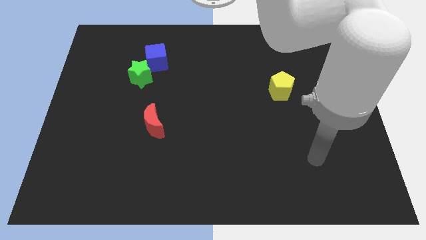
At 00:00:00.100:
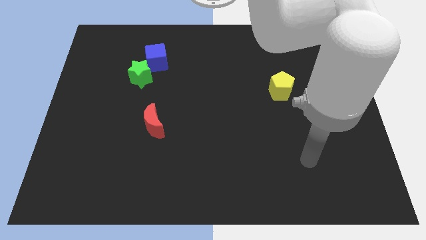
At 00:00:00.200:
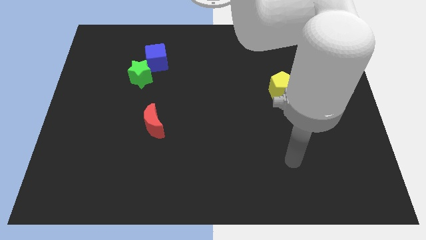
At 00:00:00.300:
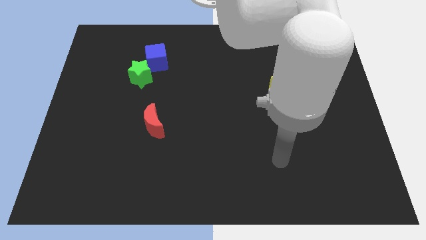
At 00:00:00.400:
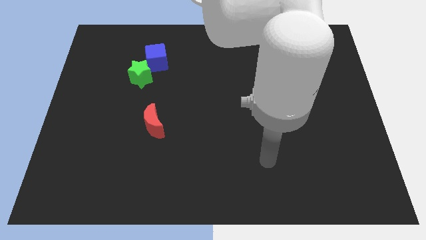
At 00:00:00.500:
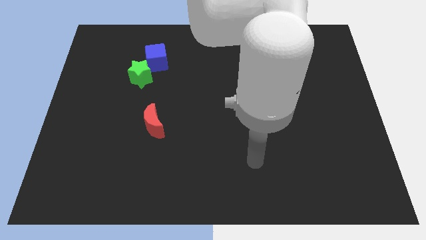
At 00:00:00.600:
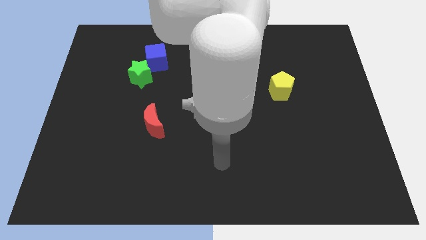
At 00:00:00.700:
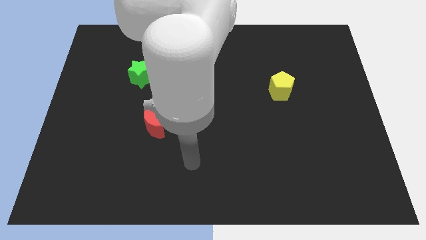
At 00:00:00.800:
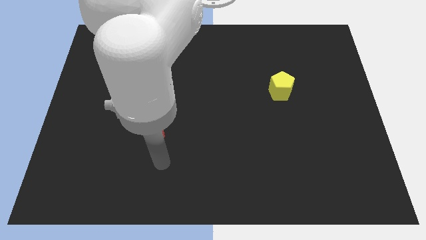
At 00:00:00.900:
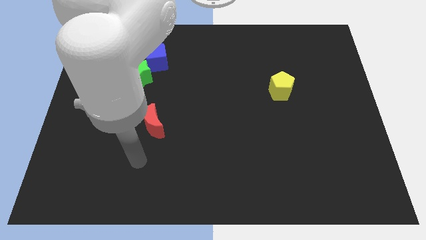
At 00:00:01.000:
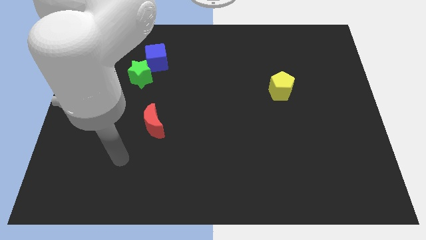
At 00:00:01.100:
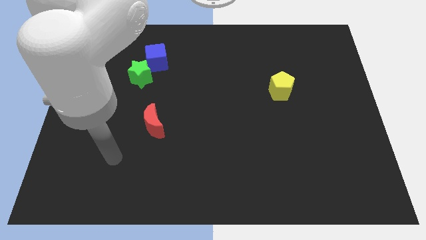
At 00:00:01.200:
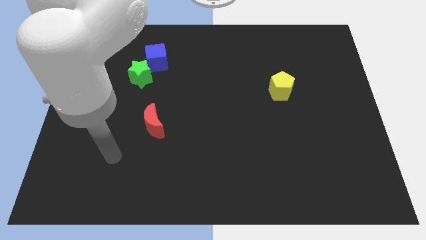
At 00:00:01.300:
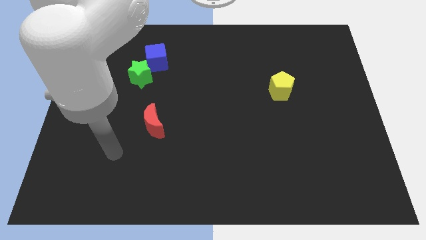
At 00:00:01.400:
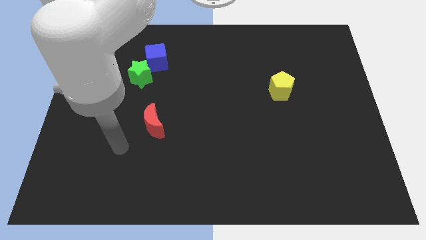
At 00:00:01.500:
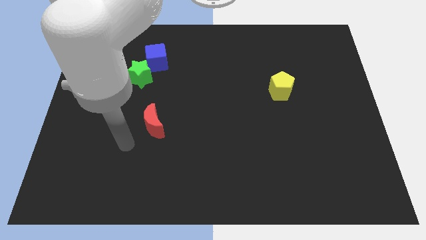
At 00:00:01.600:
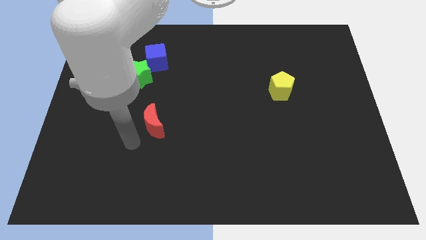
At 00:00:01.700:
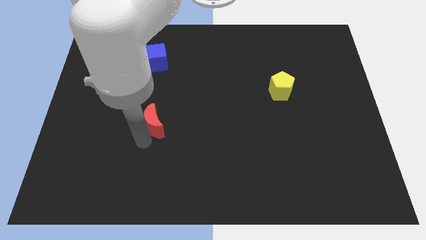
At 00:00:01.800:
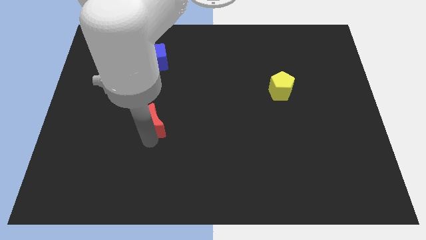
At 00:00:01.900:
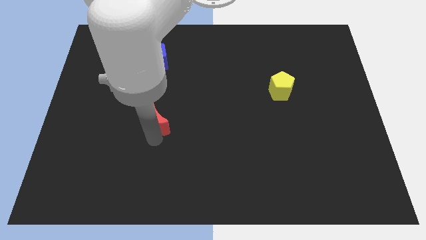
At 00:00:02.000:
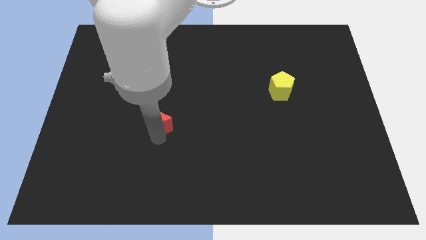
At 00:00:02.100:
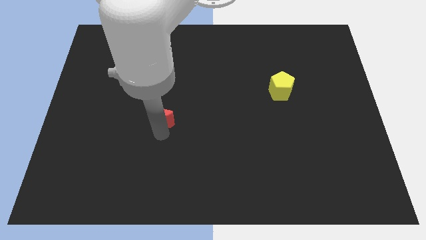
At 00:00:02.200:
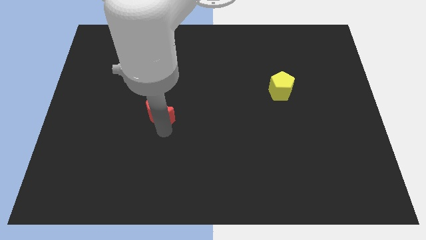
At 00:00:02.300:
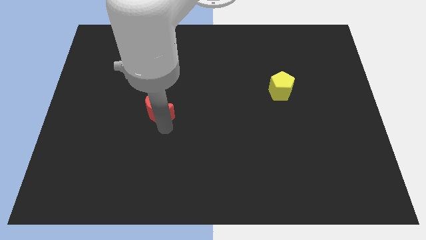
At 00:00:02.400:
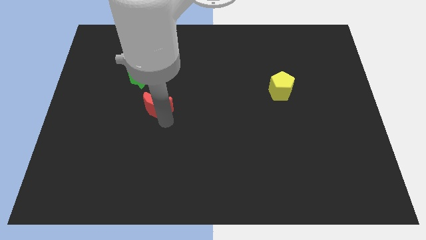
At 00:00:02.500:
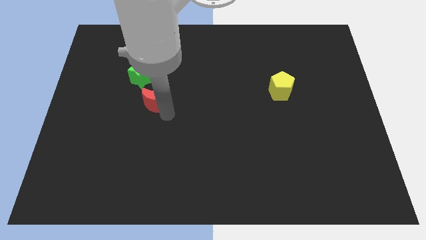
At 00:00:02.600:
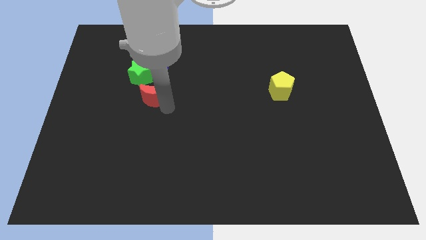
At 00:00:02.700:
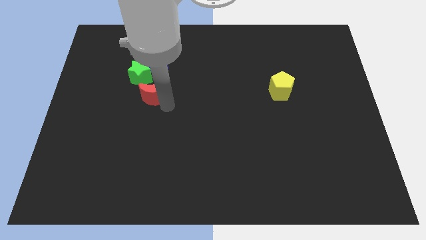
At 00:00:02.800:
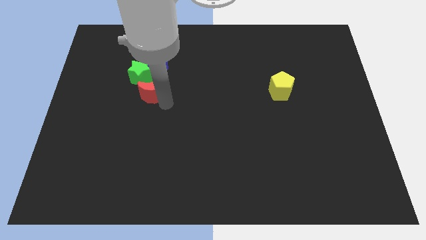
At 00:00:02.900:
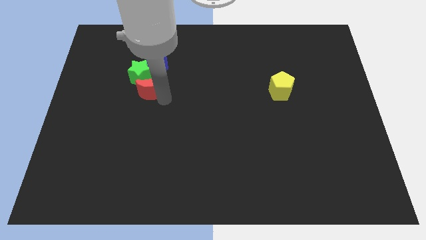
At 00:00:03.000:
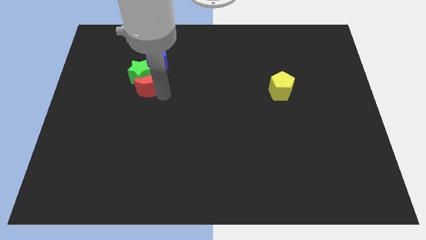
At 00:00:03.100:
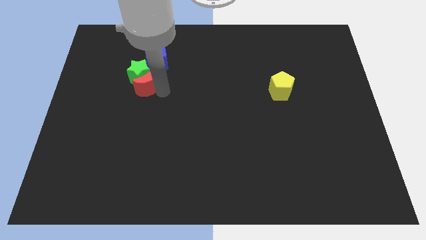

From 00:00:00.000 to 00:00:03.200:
move the red block next to the star

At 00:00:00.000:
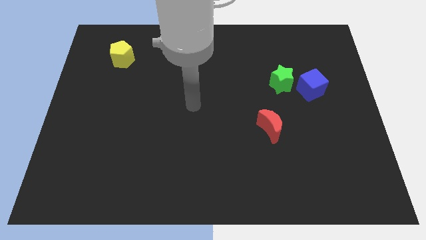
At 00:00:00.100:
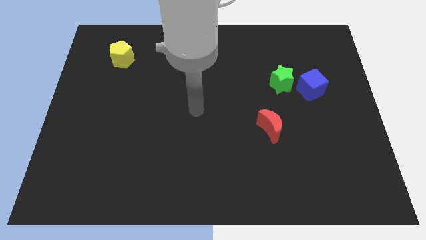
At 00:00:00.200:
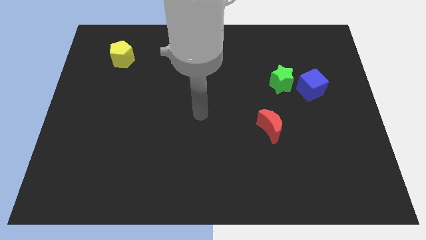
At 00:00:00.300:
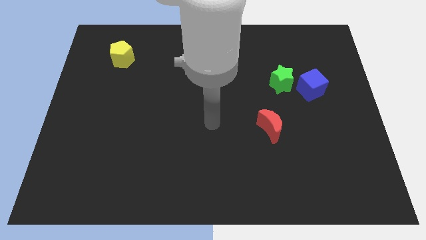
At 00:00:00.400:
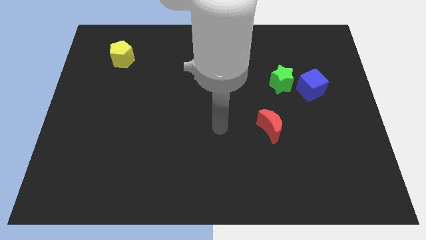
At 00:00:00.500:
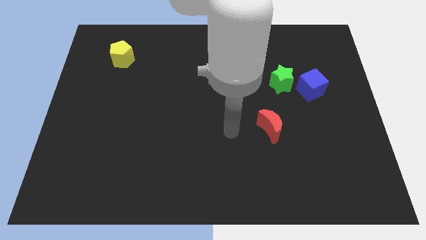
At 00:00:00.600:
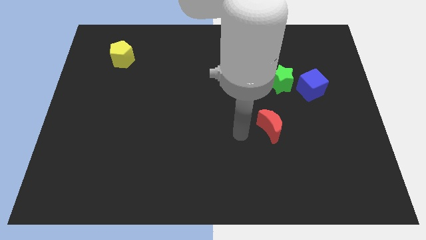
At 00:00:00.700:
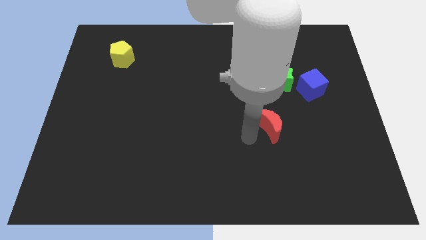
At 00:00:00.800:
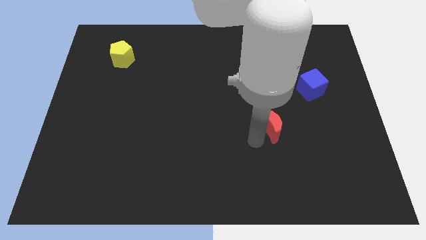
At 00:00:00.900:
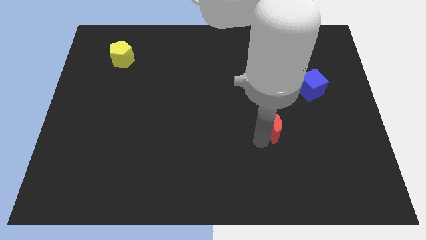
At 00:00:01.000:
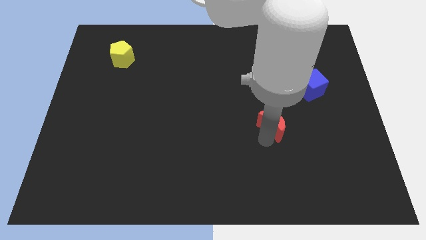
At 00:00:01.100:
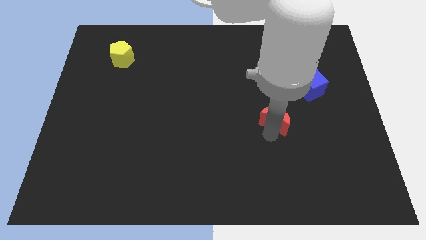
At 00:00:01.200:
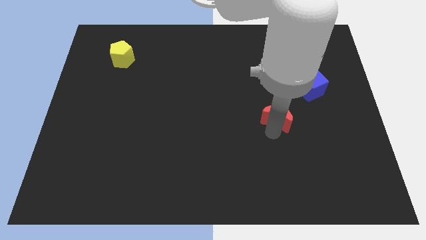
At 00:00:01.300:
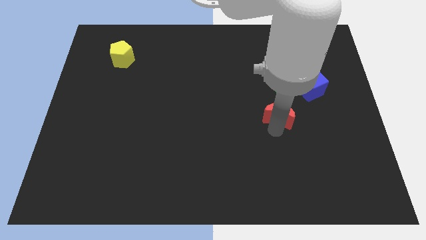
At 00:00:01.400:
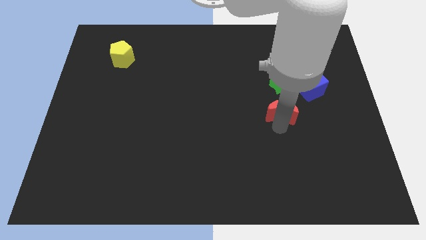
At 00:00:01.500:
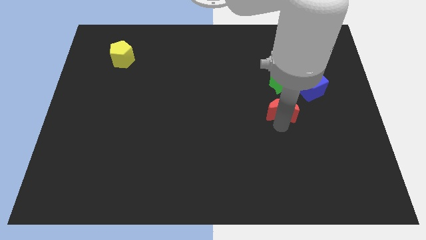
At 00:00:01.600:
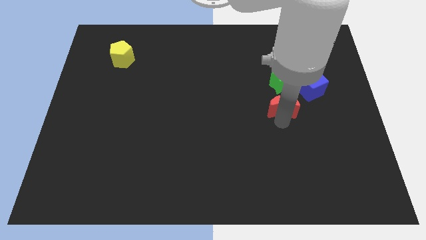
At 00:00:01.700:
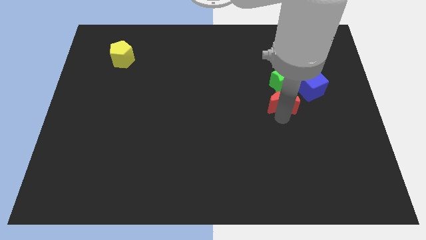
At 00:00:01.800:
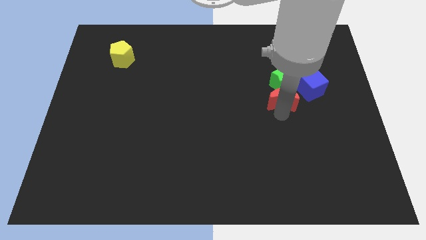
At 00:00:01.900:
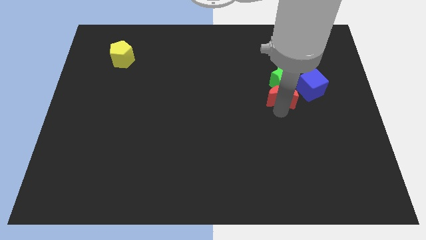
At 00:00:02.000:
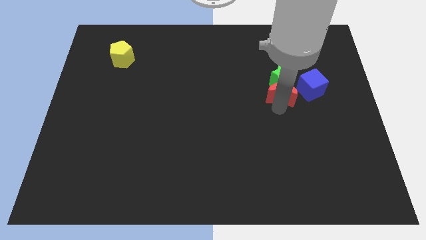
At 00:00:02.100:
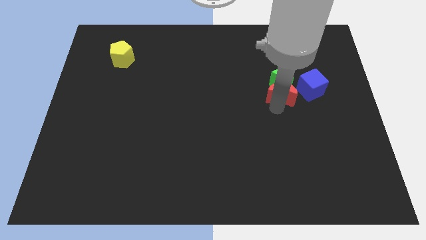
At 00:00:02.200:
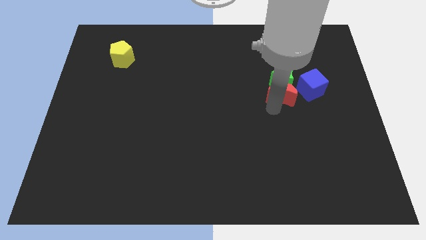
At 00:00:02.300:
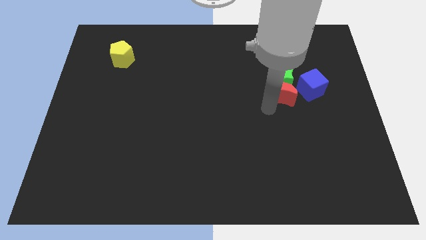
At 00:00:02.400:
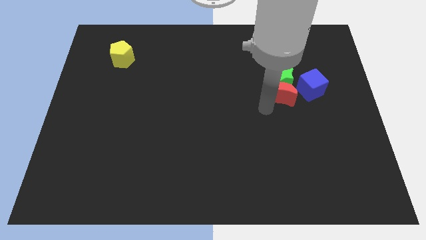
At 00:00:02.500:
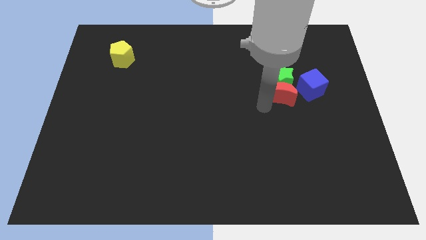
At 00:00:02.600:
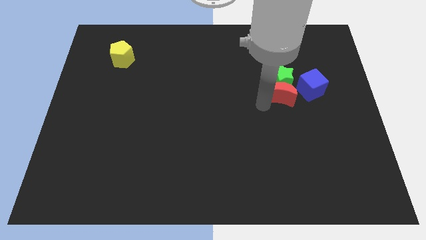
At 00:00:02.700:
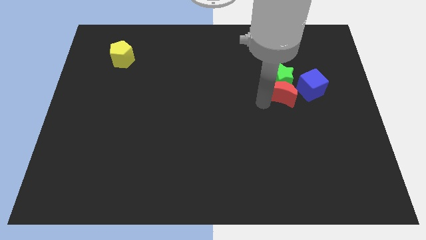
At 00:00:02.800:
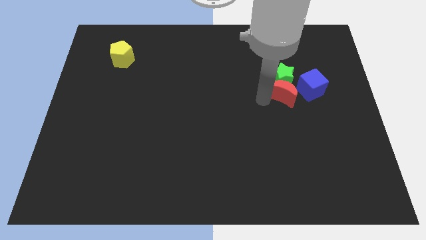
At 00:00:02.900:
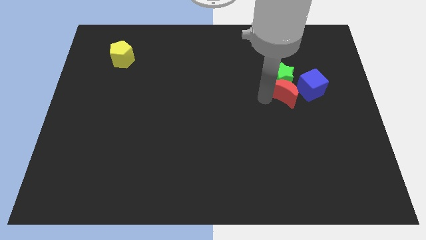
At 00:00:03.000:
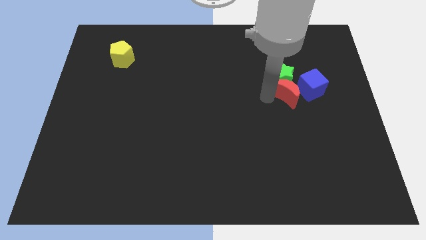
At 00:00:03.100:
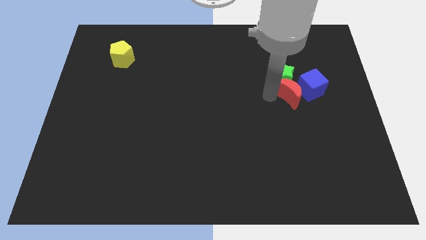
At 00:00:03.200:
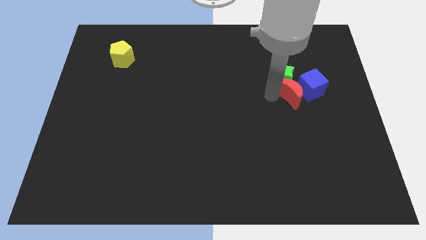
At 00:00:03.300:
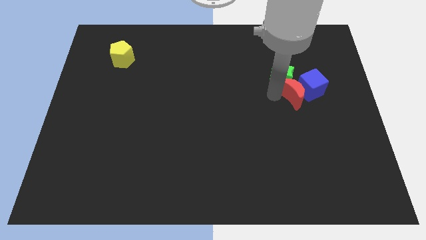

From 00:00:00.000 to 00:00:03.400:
push the red moon close to the blue cube

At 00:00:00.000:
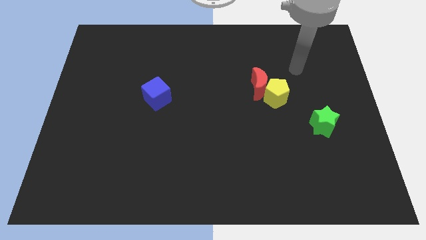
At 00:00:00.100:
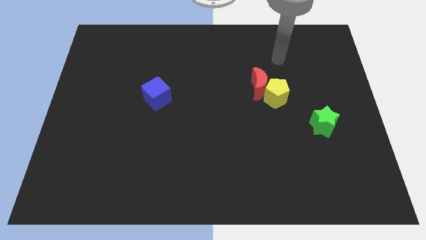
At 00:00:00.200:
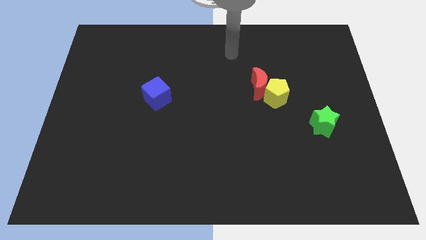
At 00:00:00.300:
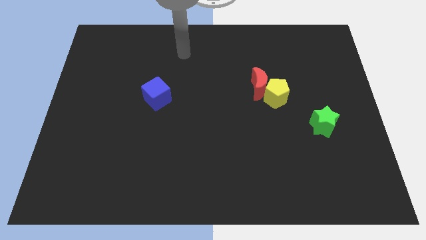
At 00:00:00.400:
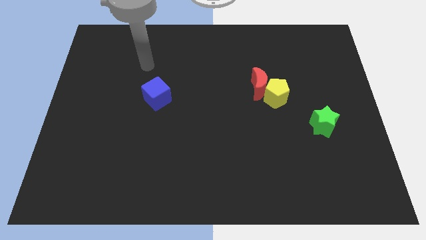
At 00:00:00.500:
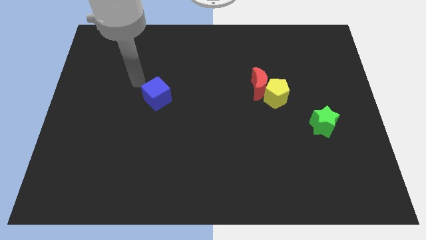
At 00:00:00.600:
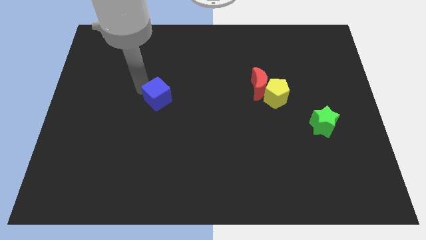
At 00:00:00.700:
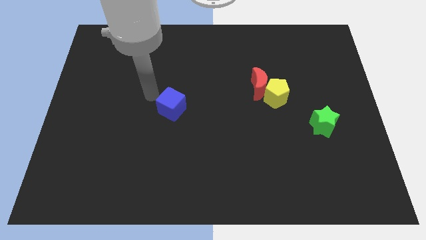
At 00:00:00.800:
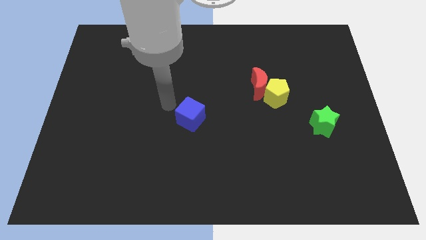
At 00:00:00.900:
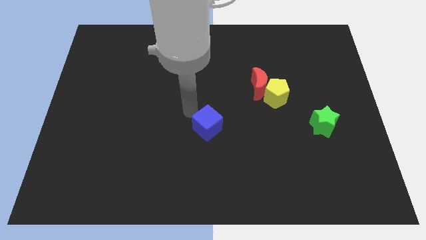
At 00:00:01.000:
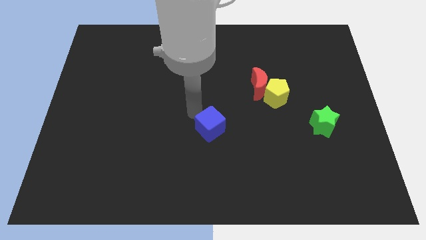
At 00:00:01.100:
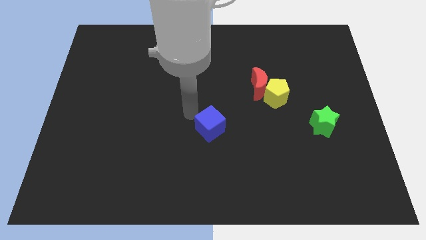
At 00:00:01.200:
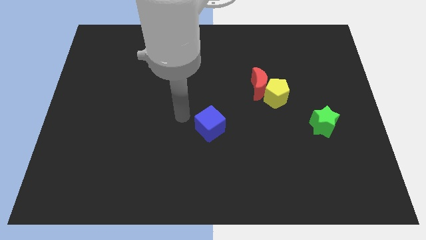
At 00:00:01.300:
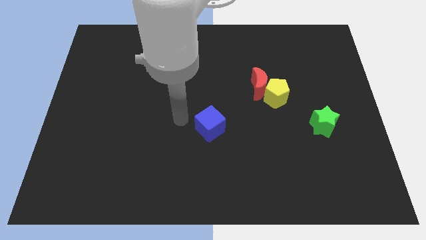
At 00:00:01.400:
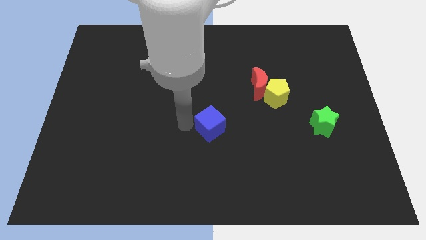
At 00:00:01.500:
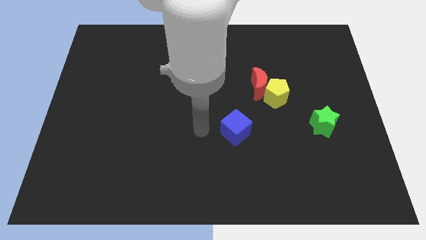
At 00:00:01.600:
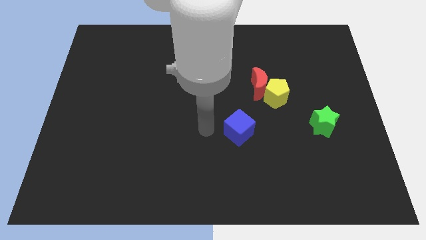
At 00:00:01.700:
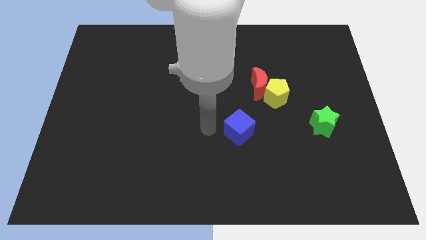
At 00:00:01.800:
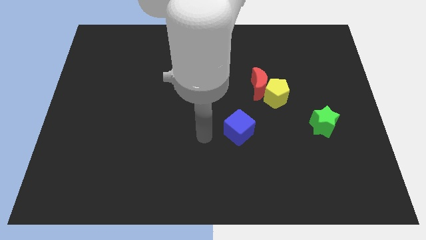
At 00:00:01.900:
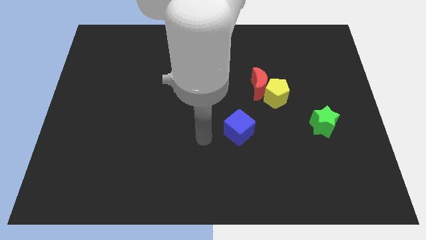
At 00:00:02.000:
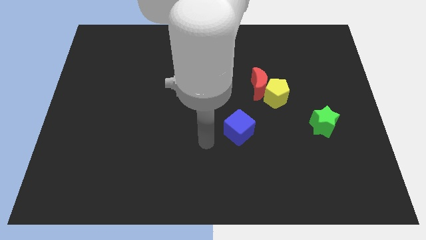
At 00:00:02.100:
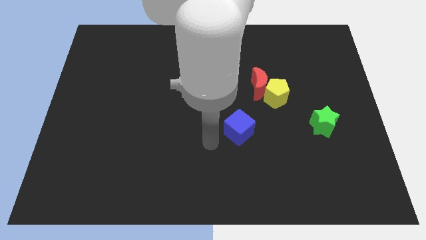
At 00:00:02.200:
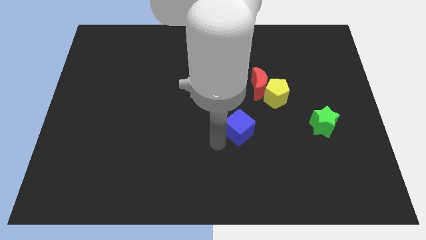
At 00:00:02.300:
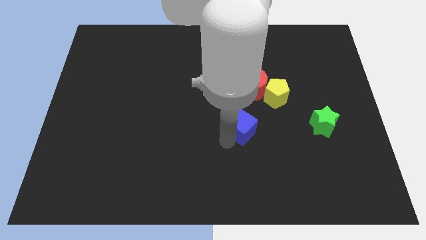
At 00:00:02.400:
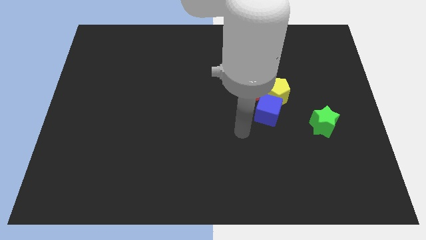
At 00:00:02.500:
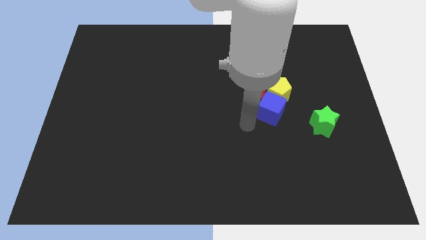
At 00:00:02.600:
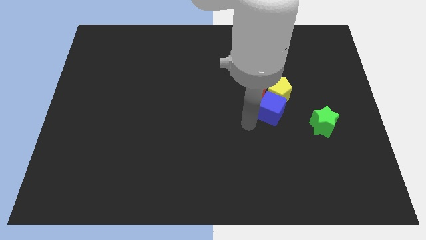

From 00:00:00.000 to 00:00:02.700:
put the blue cube next to the pentagon
